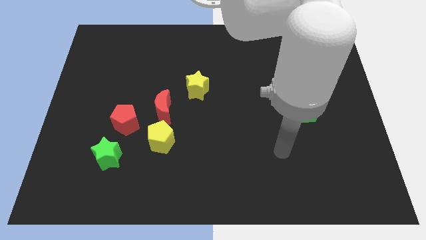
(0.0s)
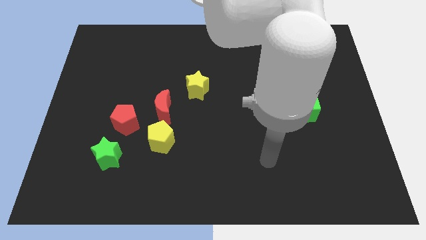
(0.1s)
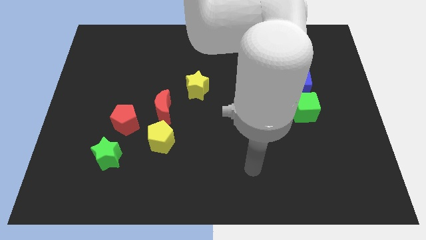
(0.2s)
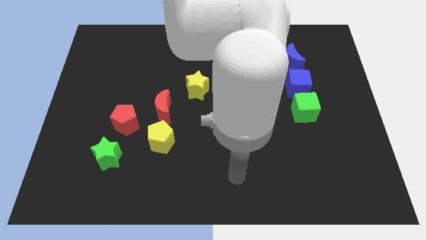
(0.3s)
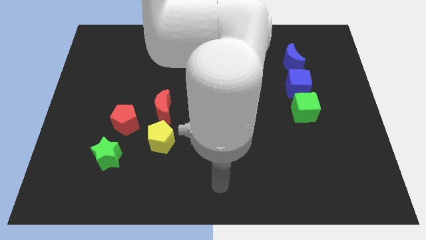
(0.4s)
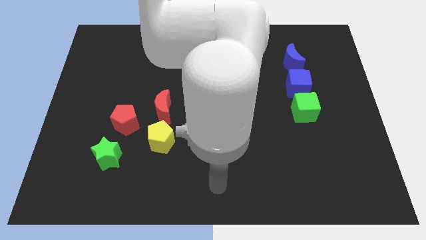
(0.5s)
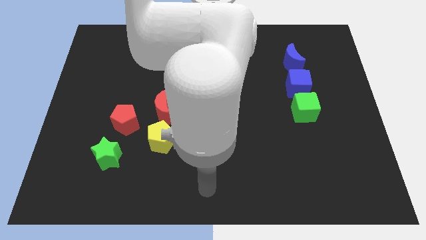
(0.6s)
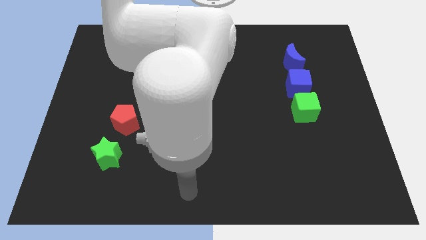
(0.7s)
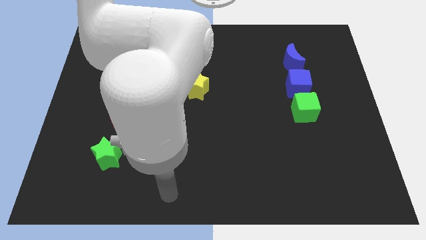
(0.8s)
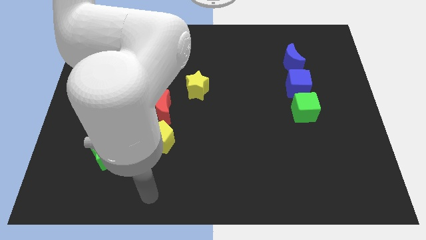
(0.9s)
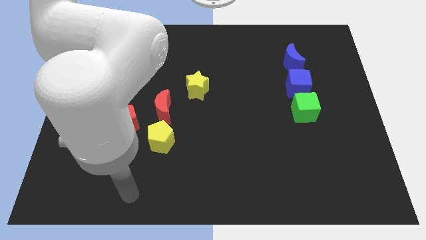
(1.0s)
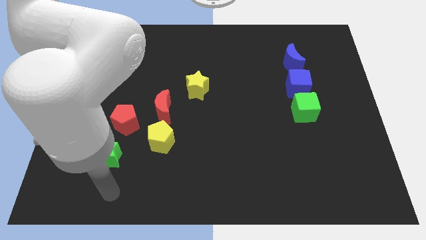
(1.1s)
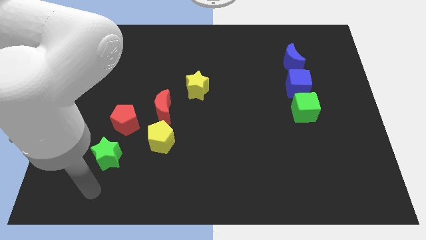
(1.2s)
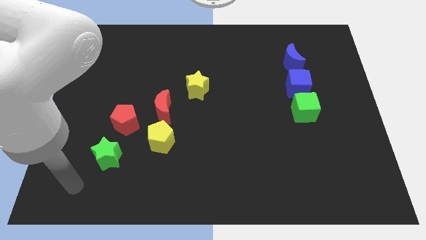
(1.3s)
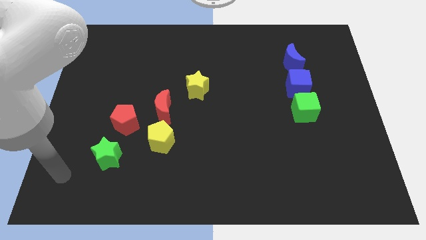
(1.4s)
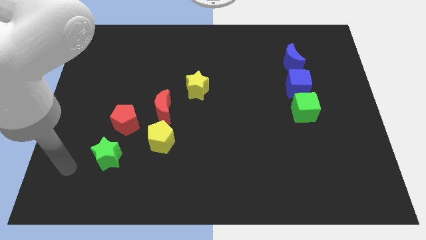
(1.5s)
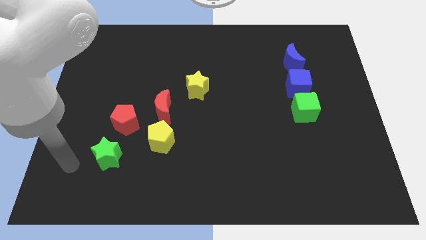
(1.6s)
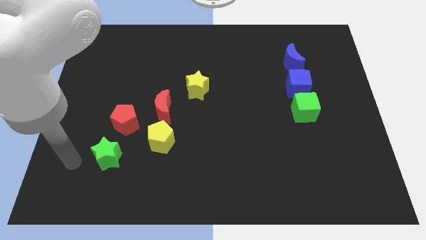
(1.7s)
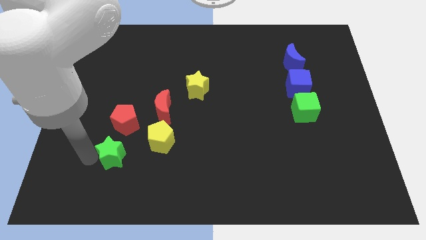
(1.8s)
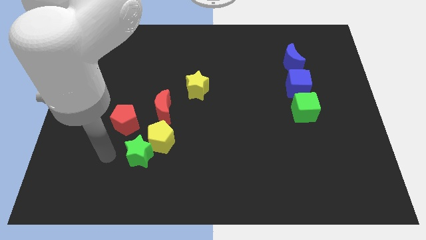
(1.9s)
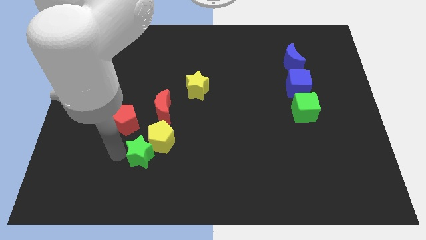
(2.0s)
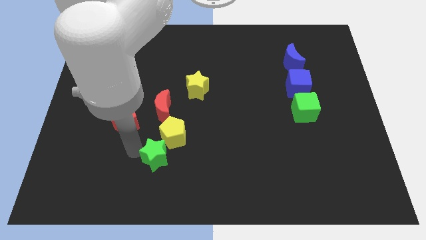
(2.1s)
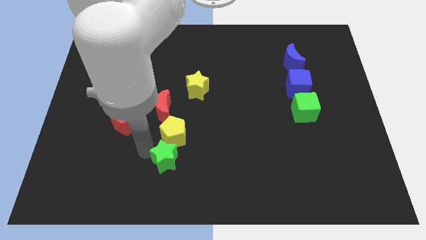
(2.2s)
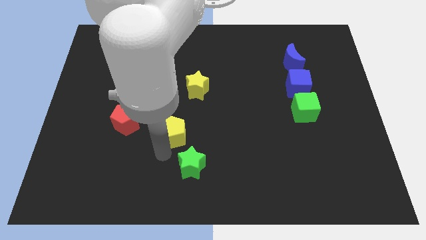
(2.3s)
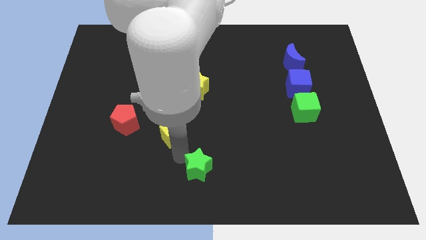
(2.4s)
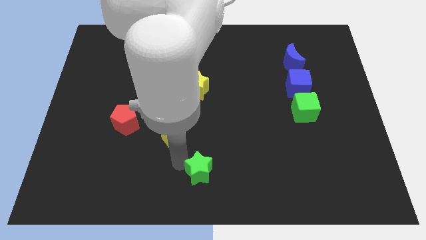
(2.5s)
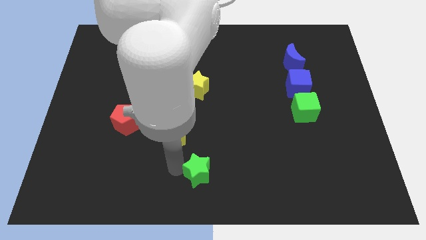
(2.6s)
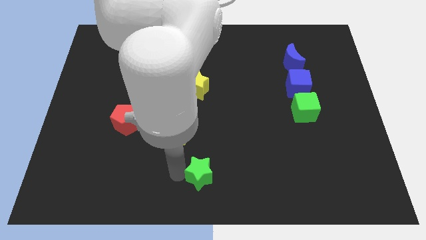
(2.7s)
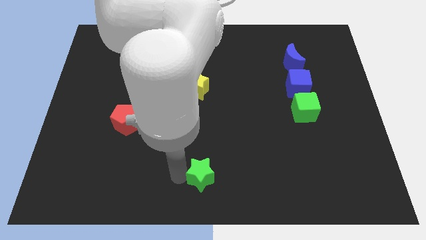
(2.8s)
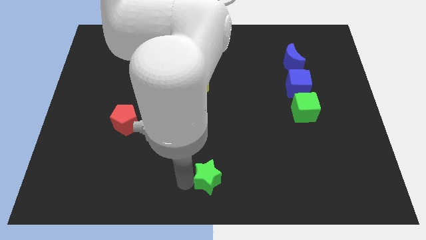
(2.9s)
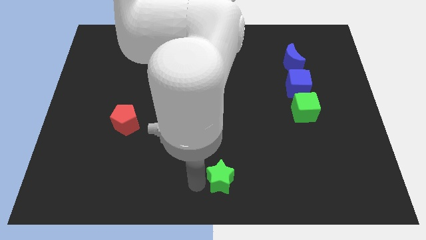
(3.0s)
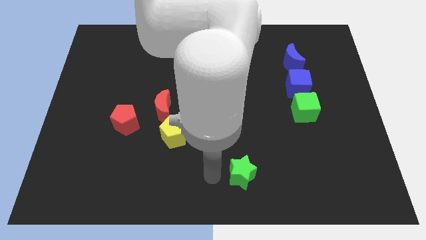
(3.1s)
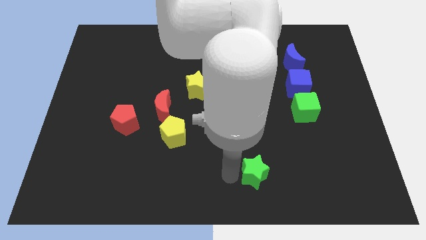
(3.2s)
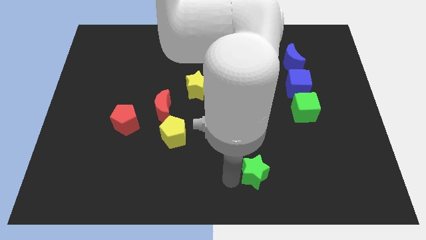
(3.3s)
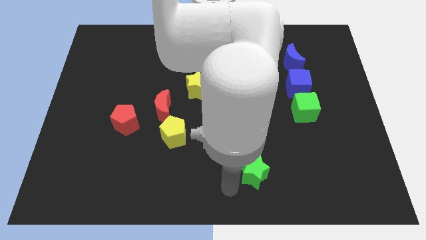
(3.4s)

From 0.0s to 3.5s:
push the green star to the right side

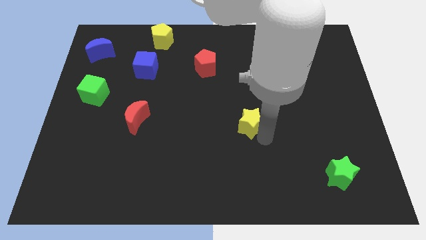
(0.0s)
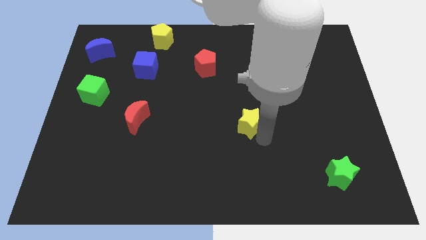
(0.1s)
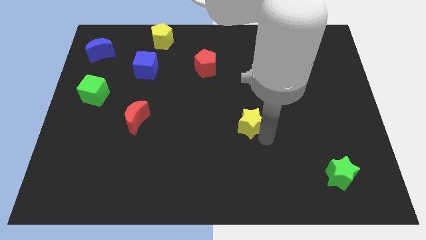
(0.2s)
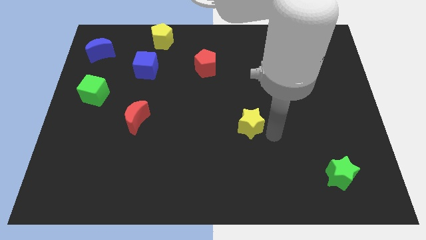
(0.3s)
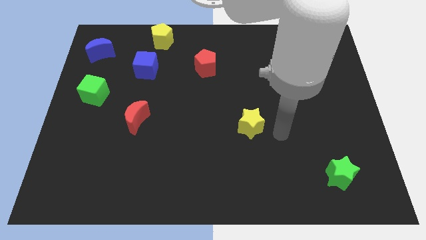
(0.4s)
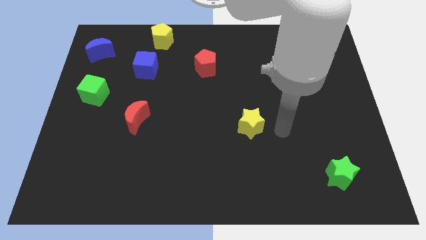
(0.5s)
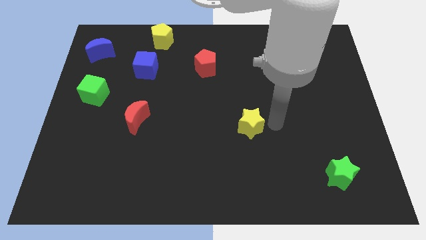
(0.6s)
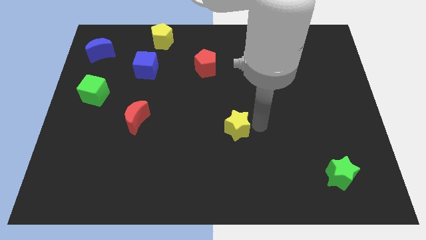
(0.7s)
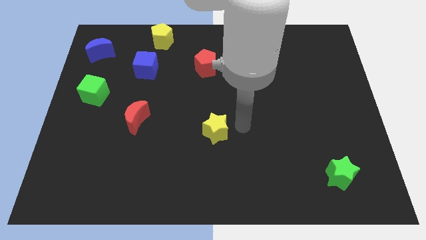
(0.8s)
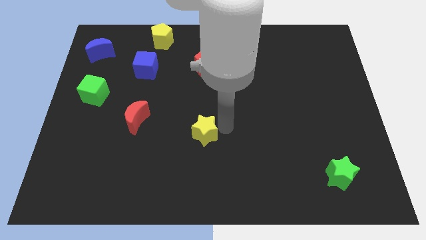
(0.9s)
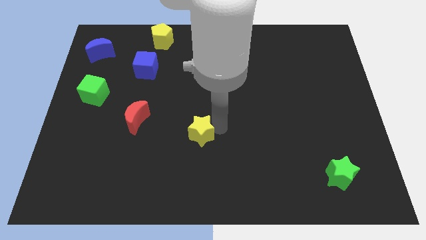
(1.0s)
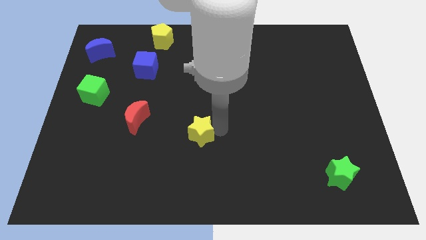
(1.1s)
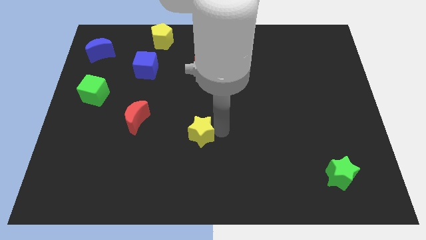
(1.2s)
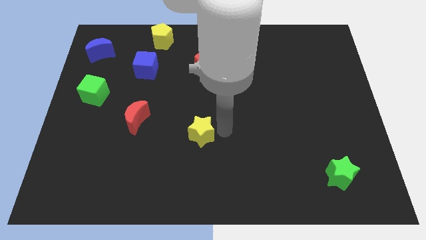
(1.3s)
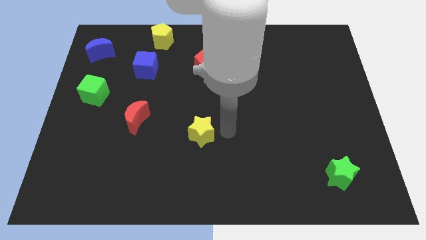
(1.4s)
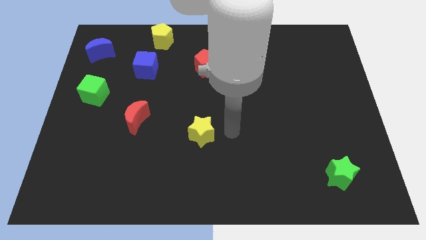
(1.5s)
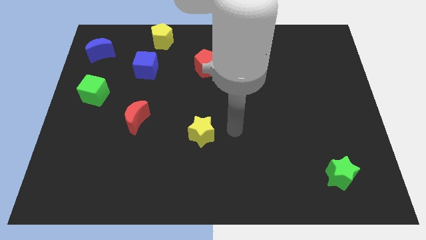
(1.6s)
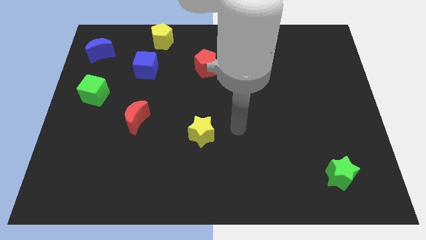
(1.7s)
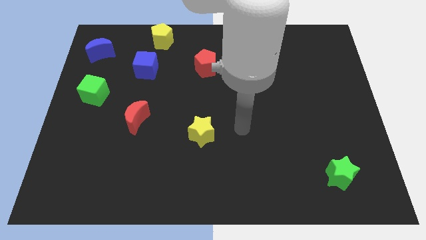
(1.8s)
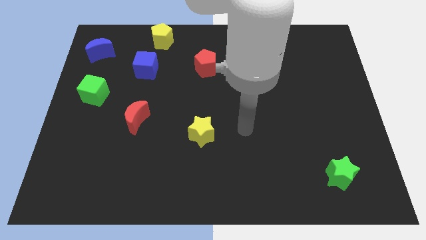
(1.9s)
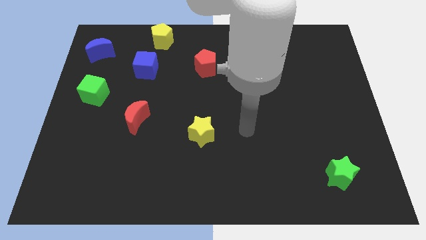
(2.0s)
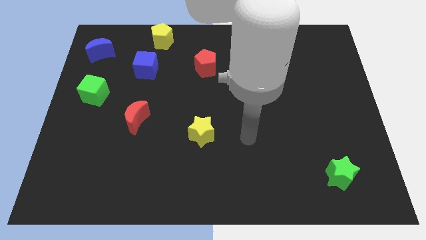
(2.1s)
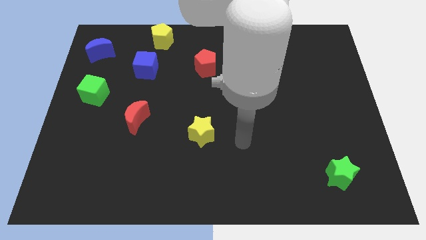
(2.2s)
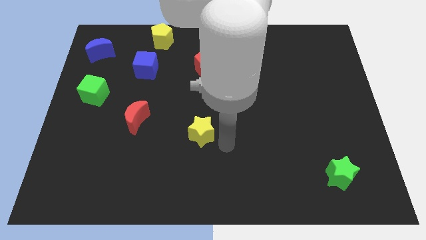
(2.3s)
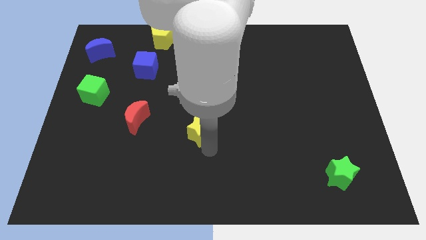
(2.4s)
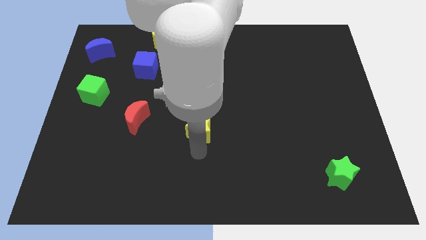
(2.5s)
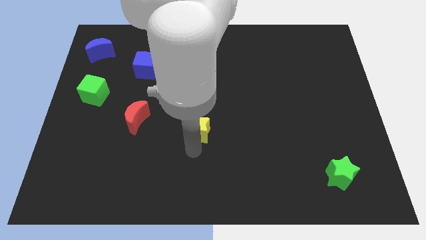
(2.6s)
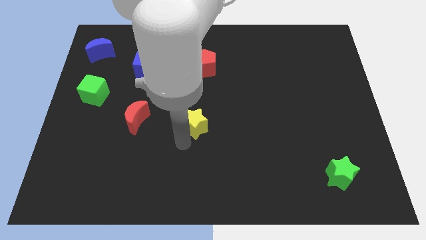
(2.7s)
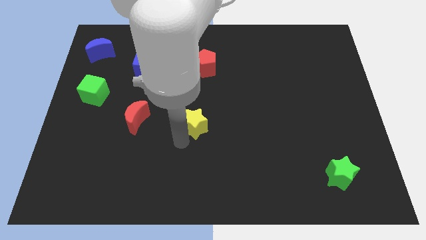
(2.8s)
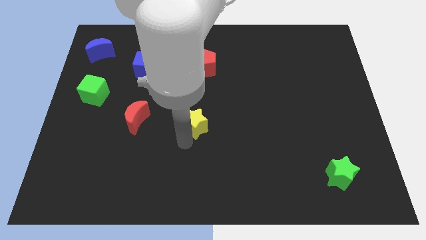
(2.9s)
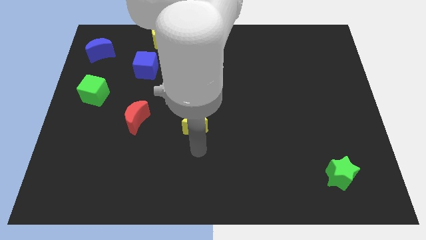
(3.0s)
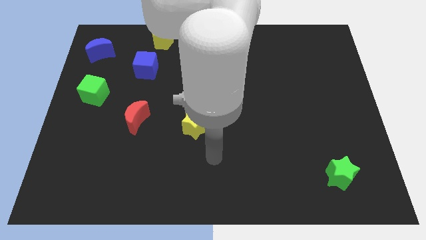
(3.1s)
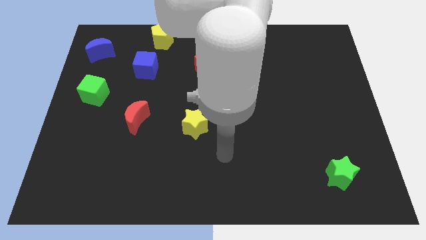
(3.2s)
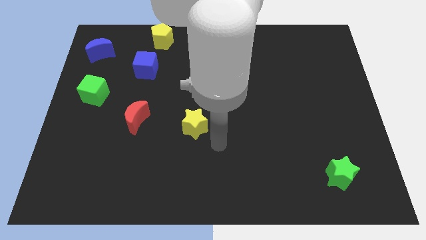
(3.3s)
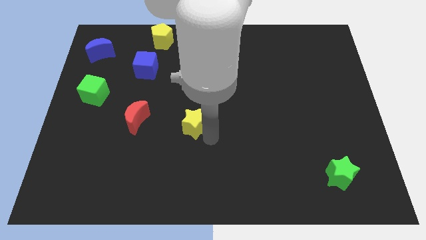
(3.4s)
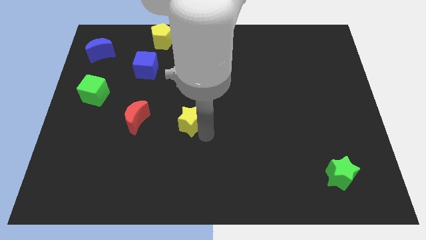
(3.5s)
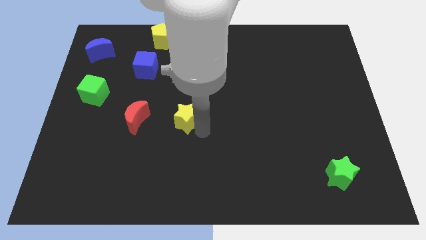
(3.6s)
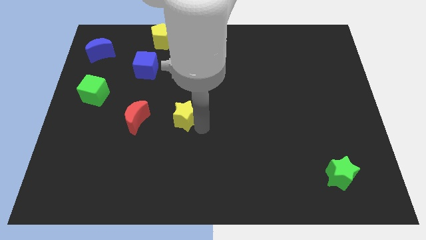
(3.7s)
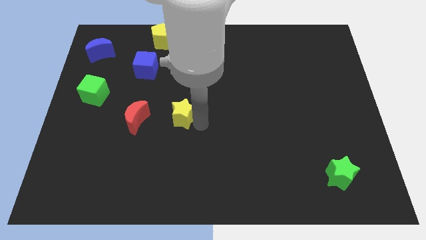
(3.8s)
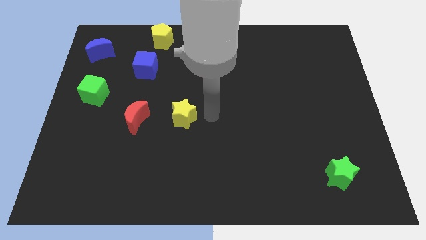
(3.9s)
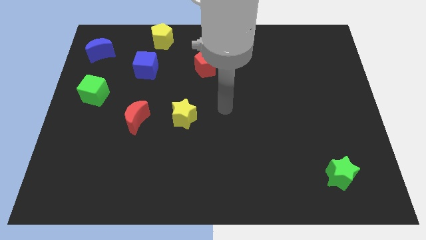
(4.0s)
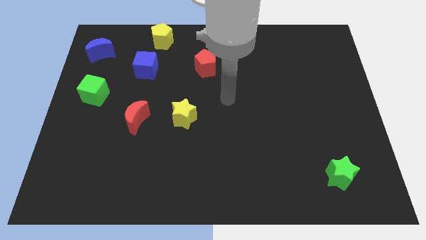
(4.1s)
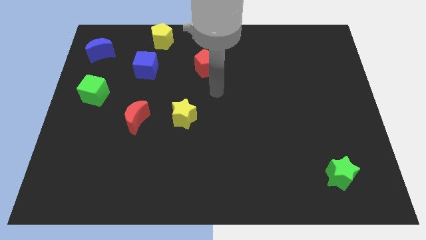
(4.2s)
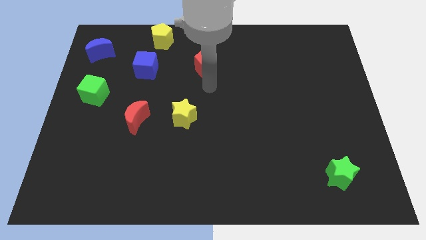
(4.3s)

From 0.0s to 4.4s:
place the yellow star right to the red moon

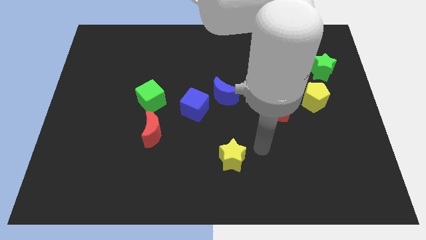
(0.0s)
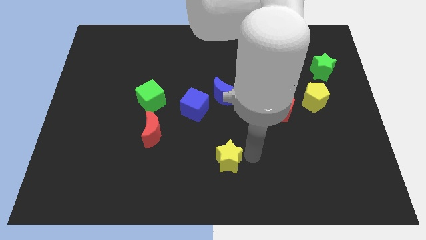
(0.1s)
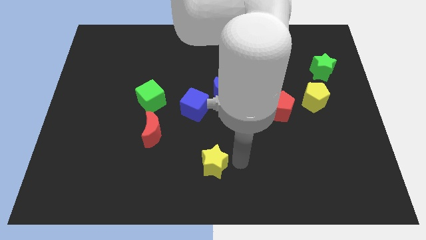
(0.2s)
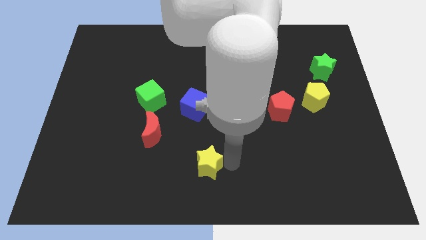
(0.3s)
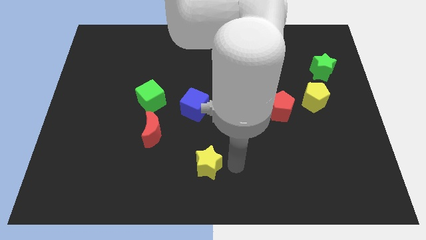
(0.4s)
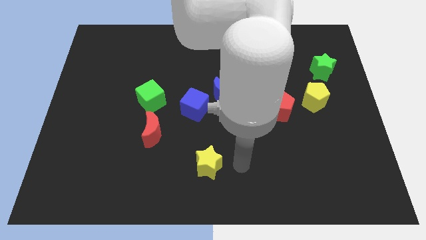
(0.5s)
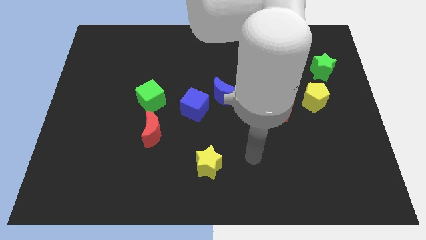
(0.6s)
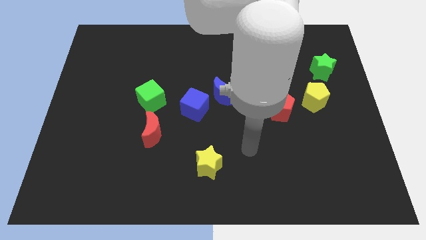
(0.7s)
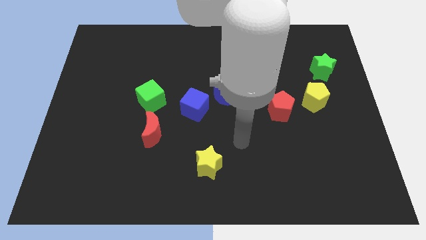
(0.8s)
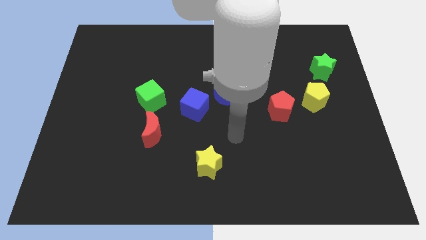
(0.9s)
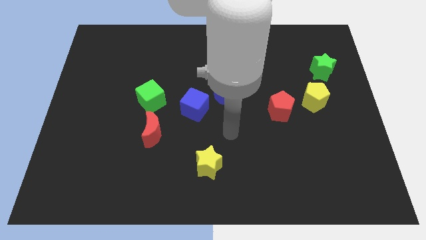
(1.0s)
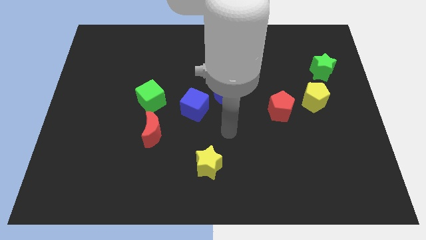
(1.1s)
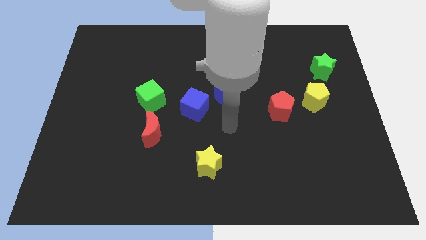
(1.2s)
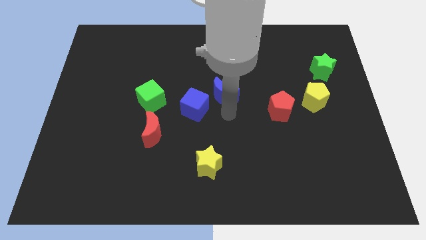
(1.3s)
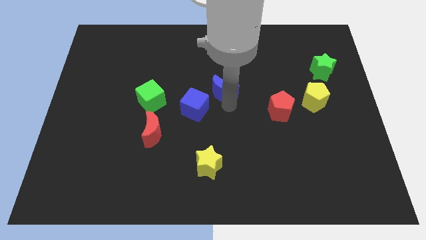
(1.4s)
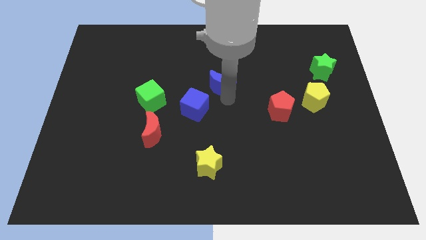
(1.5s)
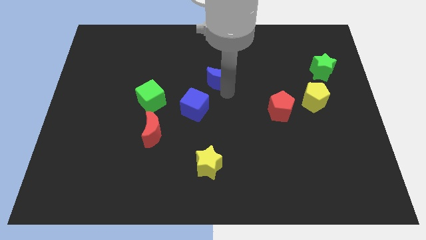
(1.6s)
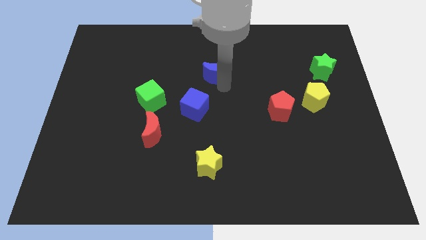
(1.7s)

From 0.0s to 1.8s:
place the blue moon above the blue cube
